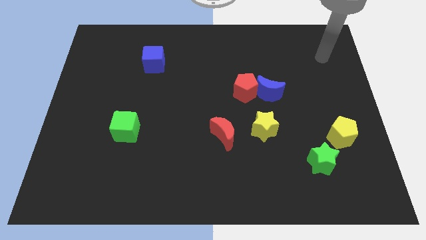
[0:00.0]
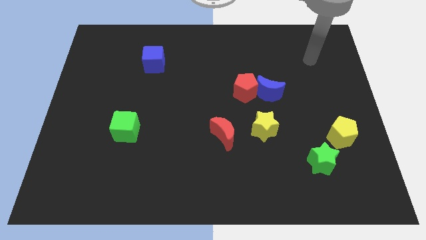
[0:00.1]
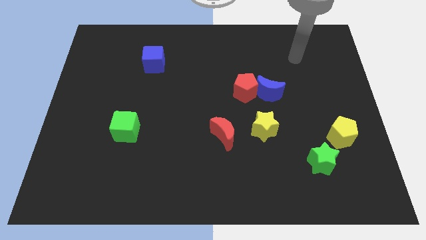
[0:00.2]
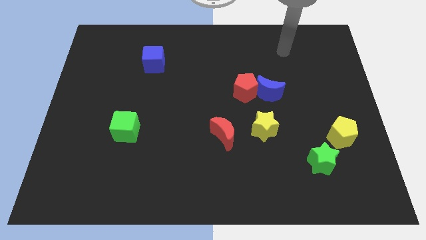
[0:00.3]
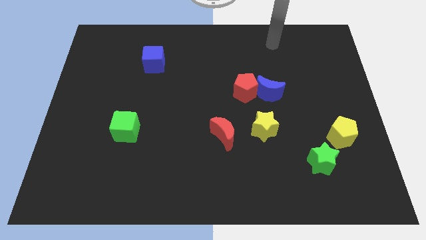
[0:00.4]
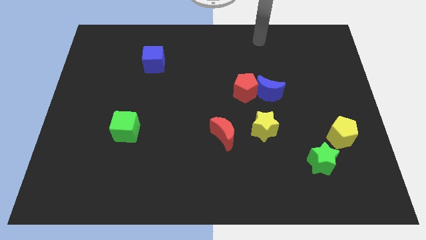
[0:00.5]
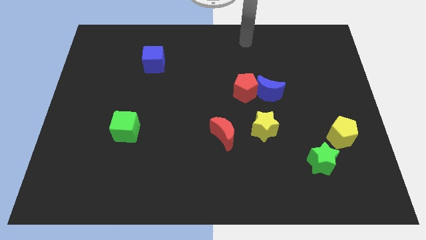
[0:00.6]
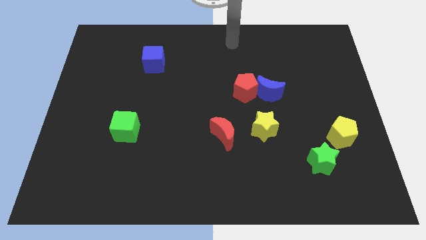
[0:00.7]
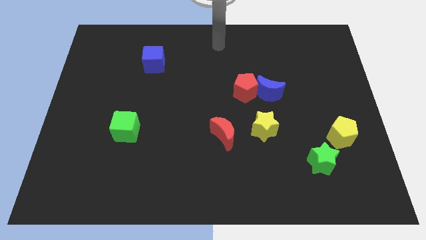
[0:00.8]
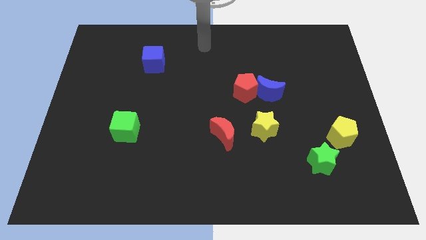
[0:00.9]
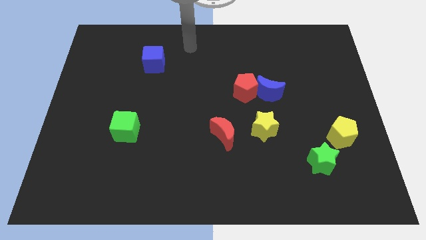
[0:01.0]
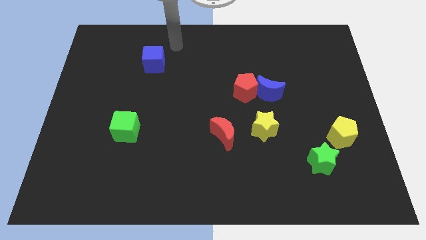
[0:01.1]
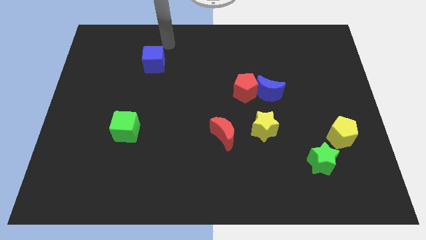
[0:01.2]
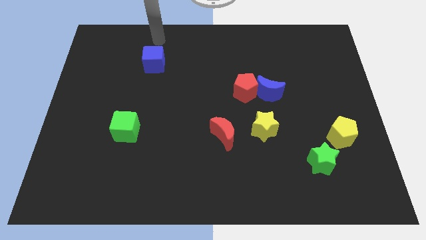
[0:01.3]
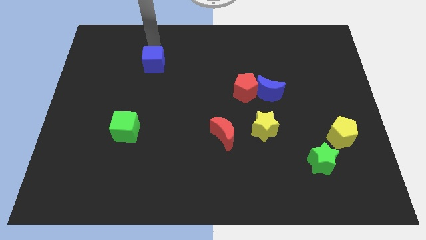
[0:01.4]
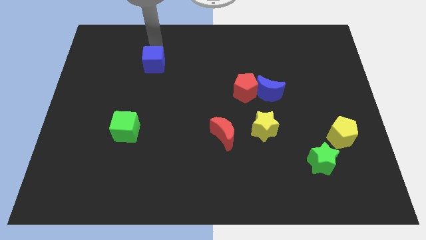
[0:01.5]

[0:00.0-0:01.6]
place the arm above the blue cube

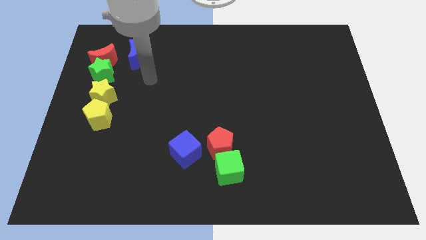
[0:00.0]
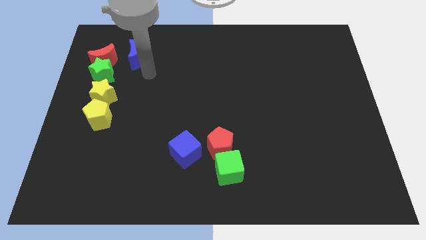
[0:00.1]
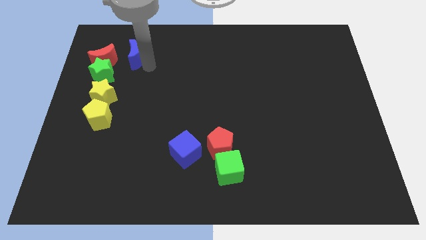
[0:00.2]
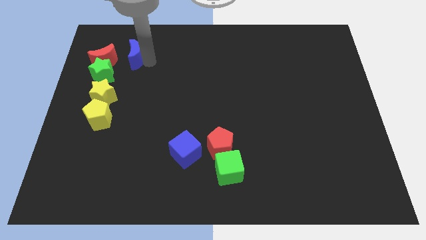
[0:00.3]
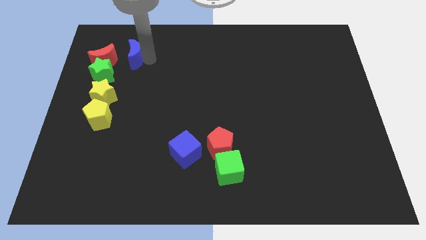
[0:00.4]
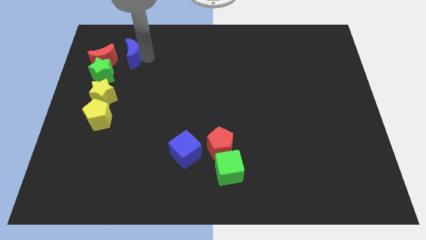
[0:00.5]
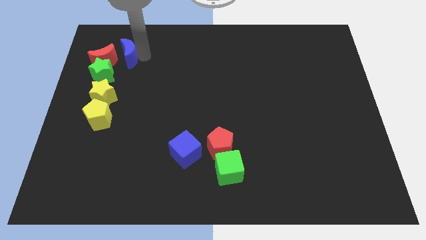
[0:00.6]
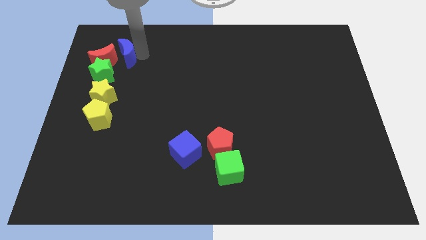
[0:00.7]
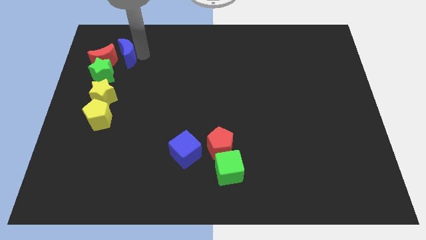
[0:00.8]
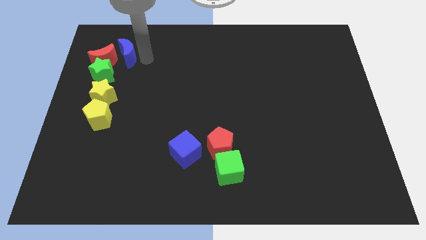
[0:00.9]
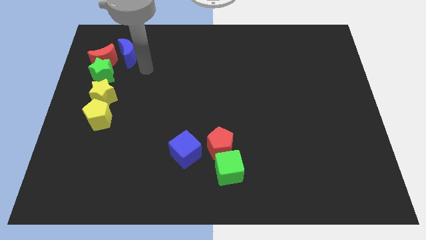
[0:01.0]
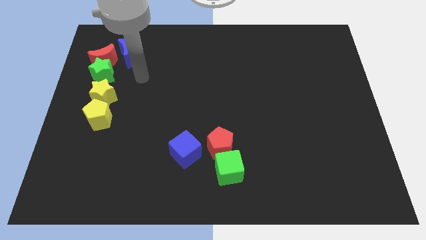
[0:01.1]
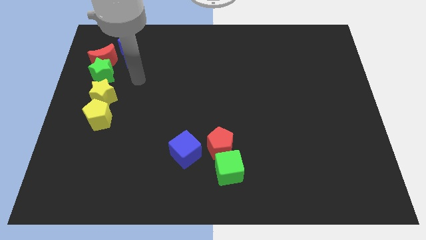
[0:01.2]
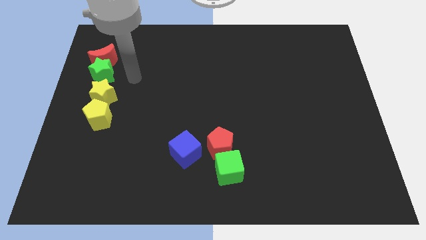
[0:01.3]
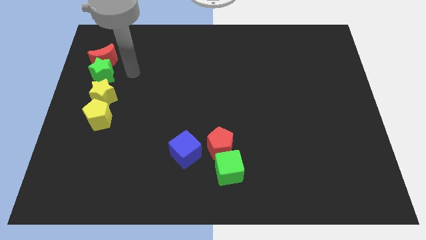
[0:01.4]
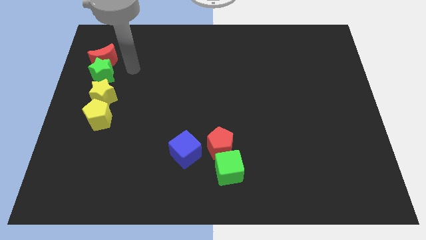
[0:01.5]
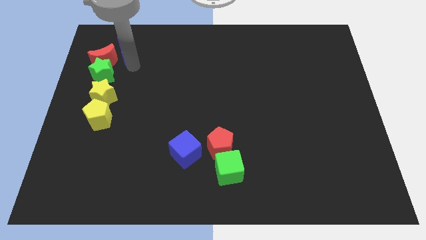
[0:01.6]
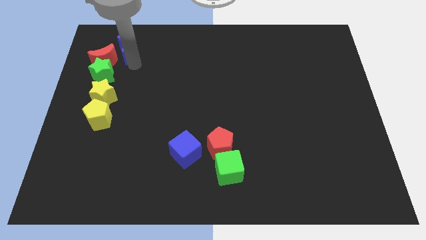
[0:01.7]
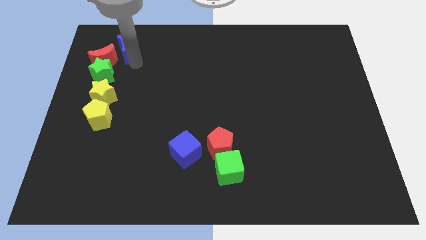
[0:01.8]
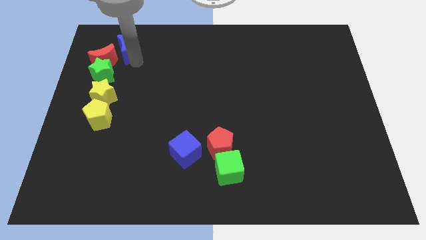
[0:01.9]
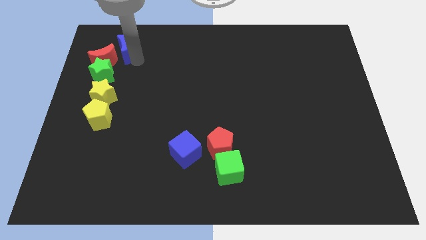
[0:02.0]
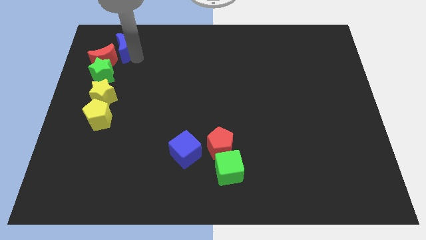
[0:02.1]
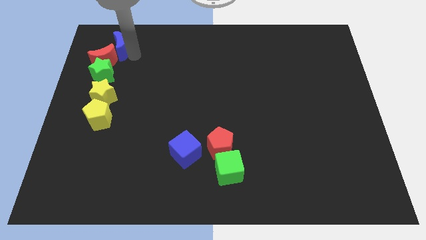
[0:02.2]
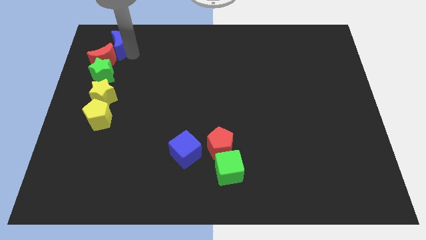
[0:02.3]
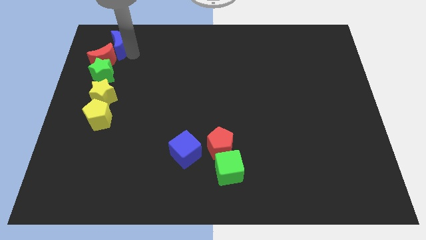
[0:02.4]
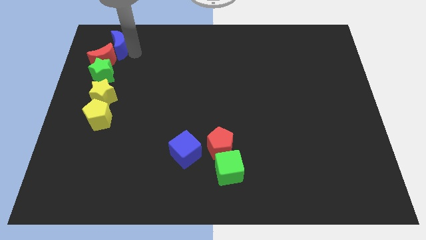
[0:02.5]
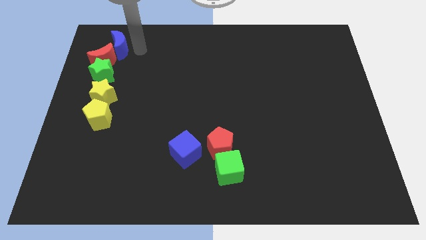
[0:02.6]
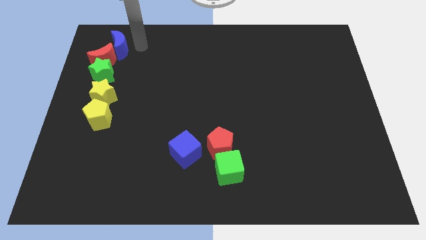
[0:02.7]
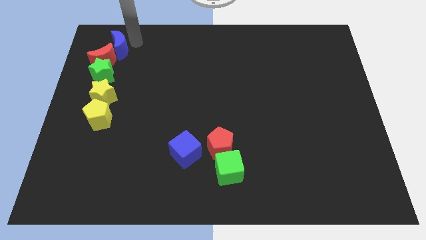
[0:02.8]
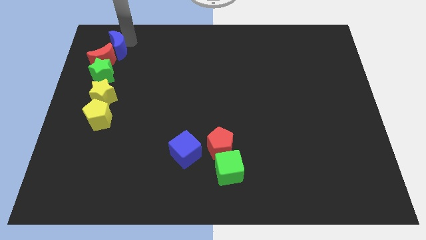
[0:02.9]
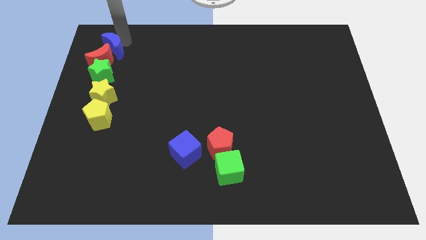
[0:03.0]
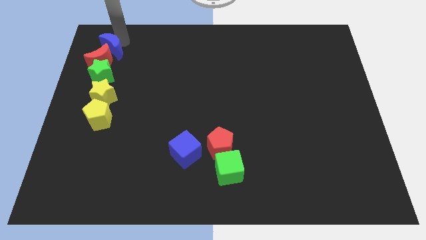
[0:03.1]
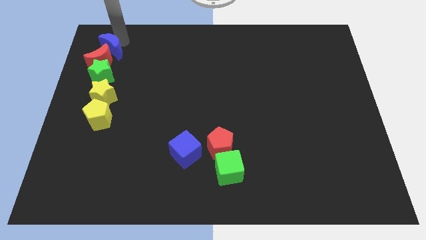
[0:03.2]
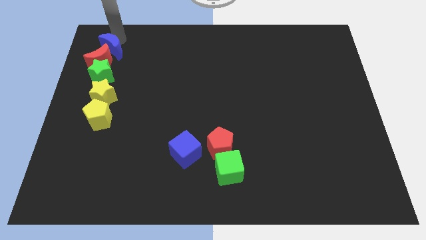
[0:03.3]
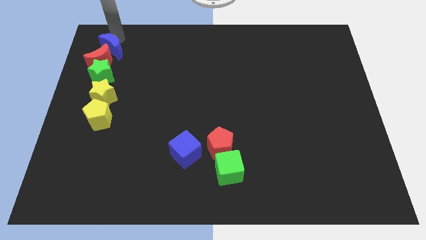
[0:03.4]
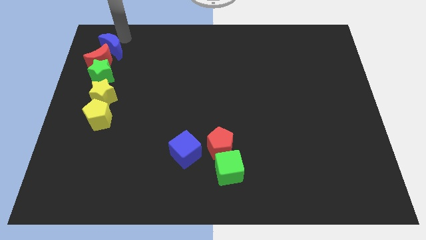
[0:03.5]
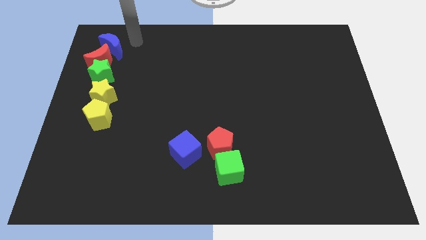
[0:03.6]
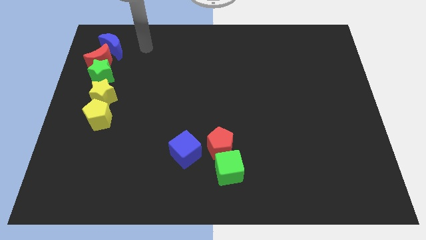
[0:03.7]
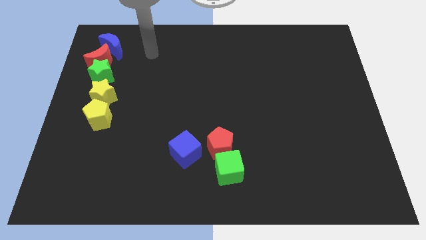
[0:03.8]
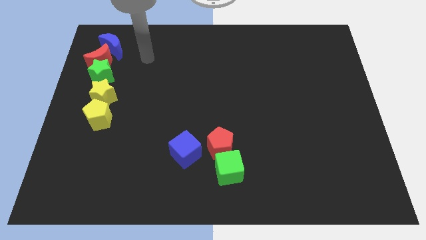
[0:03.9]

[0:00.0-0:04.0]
place the blue moon to the top right of the red crescent

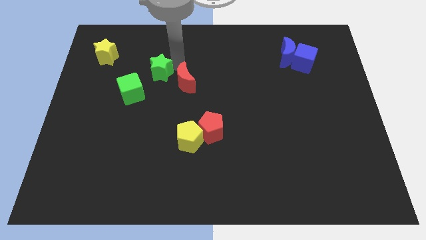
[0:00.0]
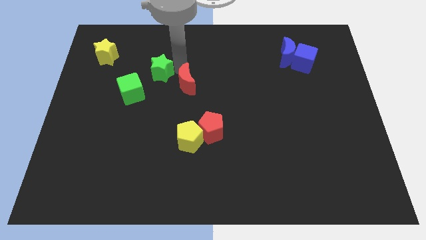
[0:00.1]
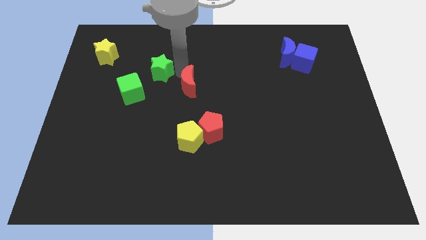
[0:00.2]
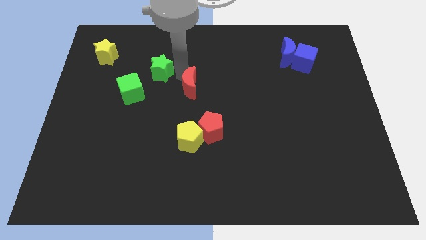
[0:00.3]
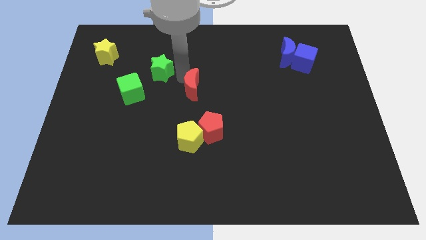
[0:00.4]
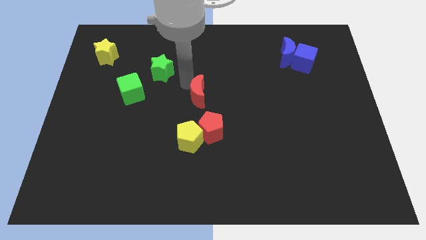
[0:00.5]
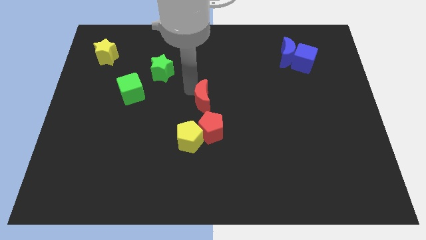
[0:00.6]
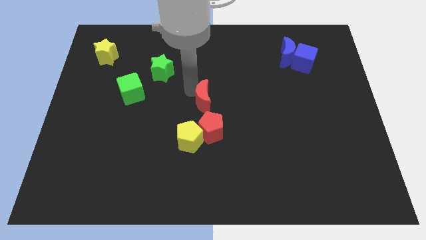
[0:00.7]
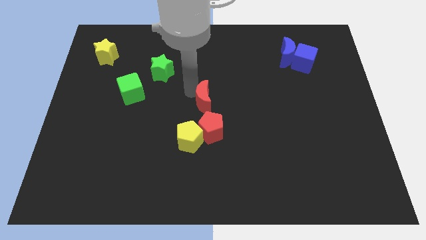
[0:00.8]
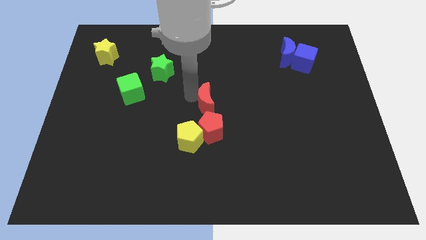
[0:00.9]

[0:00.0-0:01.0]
move the red crescent above the red pentagon

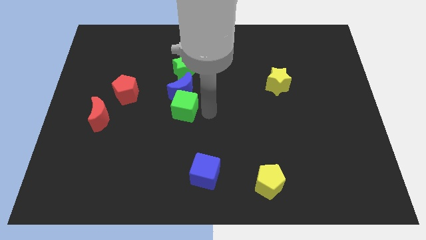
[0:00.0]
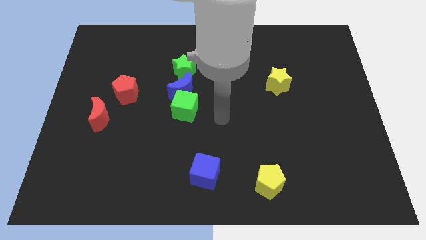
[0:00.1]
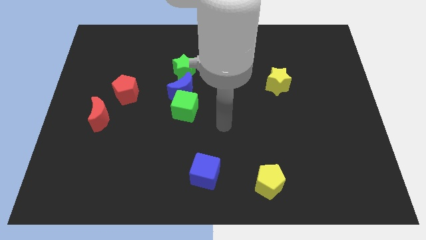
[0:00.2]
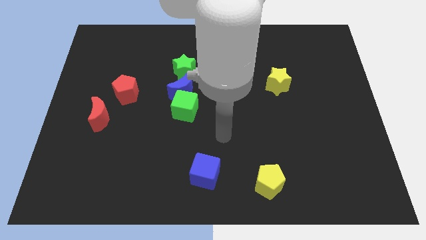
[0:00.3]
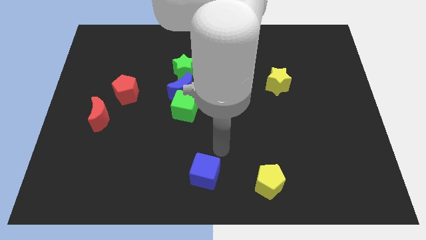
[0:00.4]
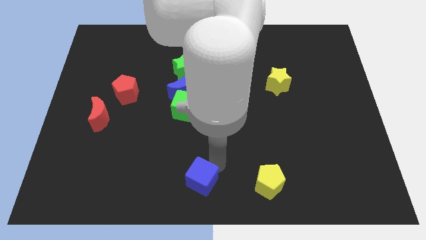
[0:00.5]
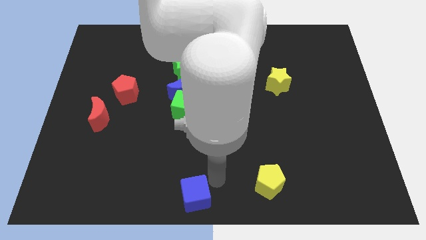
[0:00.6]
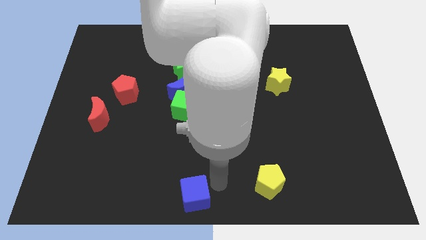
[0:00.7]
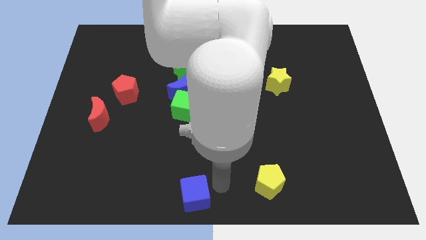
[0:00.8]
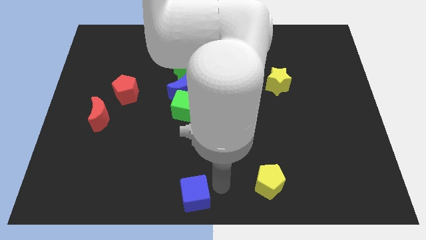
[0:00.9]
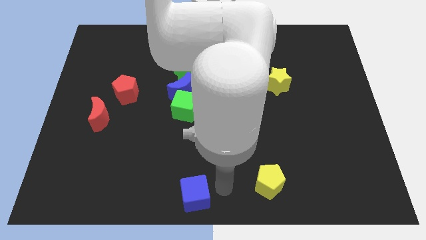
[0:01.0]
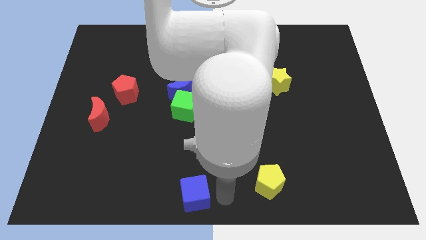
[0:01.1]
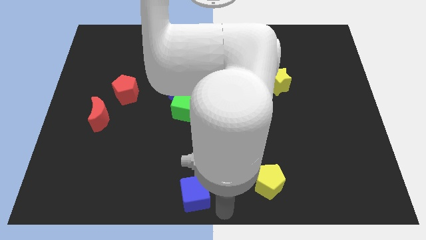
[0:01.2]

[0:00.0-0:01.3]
move the blue cube to the bottom center of the board

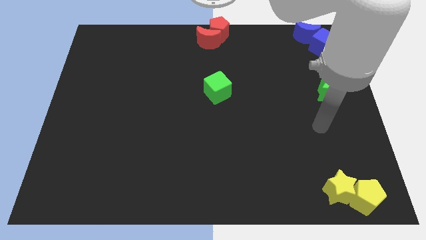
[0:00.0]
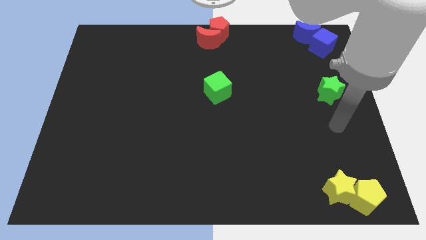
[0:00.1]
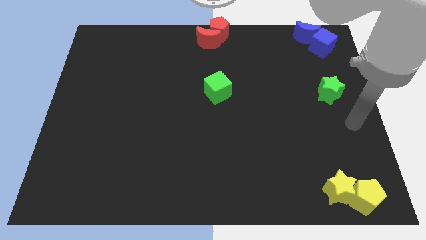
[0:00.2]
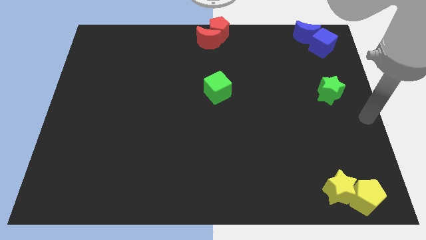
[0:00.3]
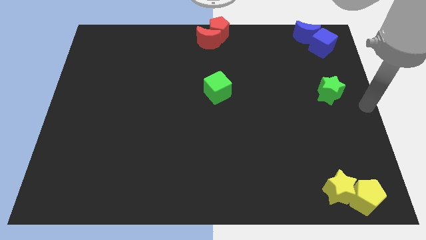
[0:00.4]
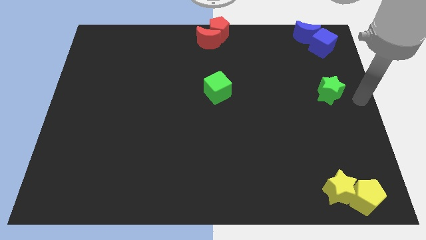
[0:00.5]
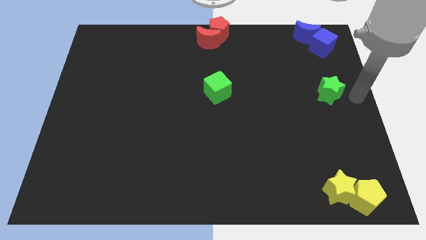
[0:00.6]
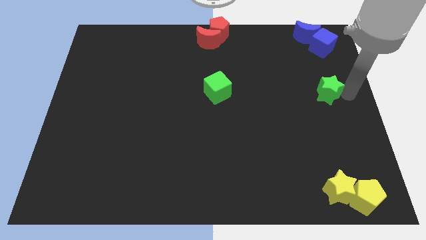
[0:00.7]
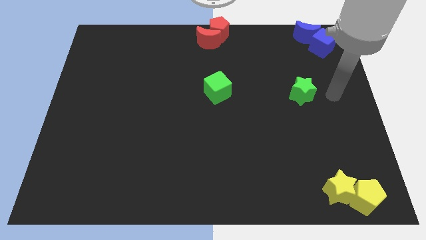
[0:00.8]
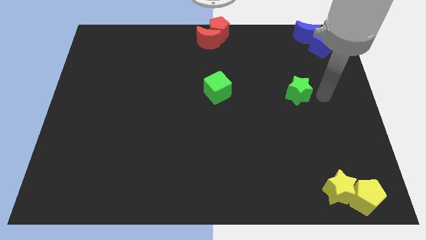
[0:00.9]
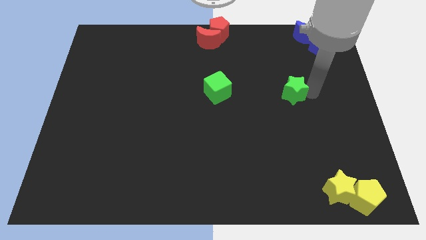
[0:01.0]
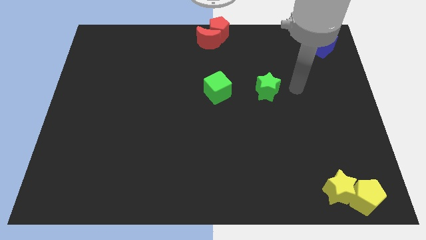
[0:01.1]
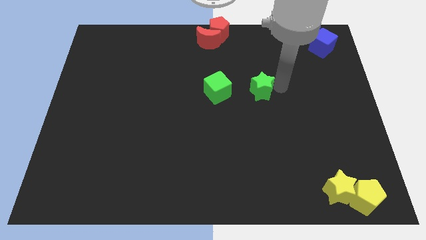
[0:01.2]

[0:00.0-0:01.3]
push the green star closer to the green cube
